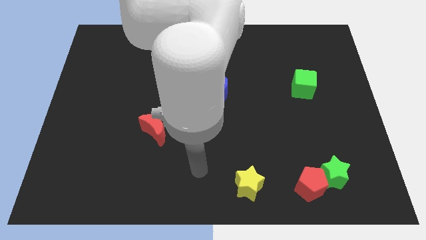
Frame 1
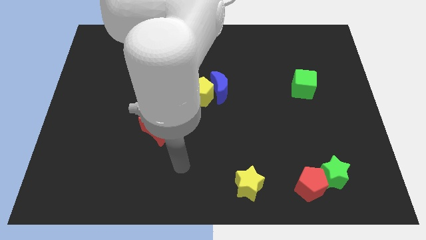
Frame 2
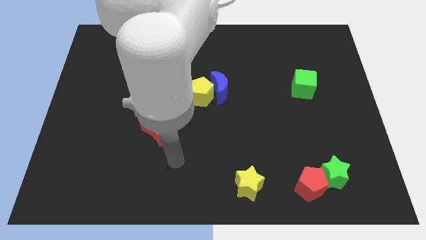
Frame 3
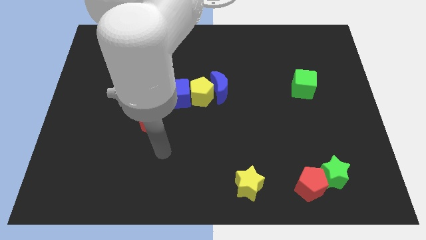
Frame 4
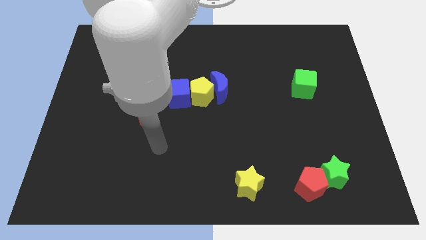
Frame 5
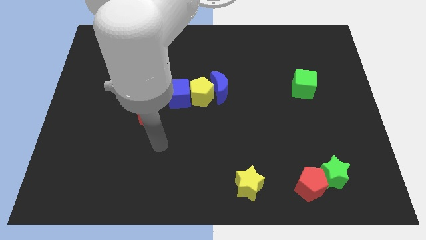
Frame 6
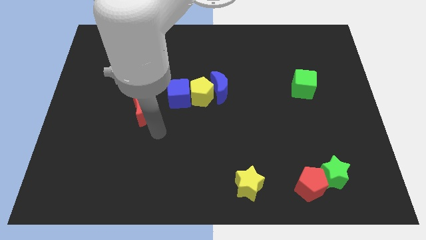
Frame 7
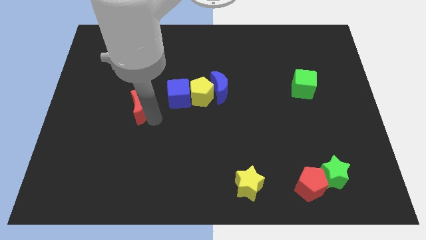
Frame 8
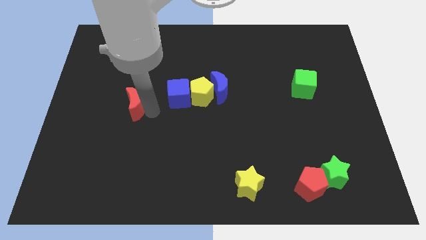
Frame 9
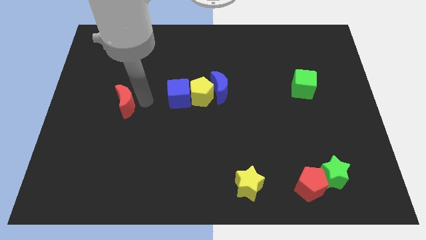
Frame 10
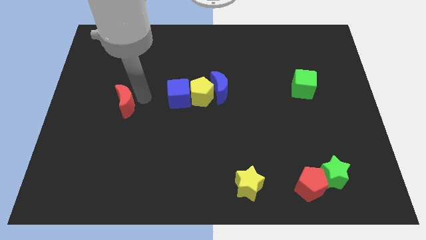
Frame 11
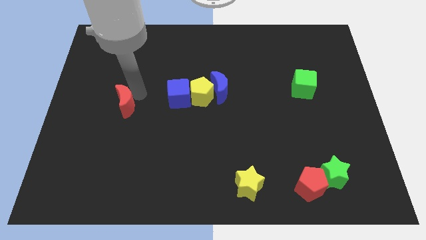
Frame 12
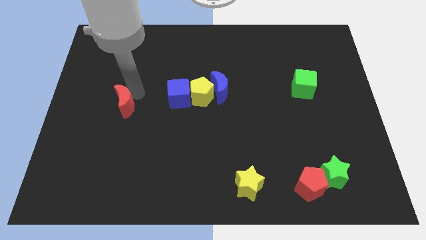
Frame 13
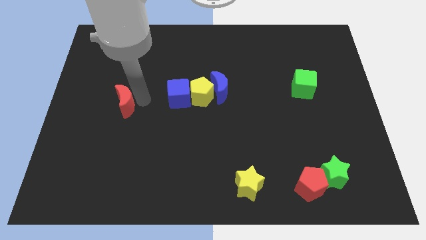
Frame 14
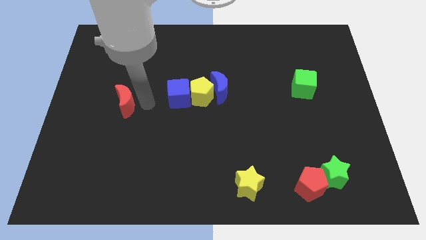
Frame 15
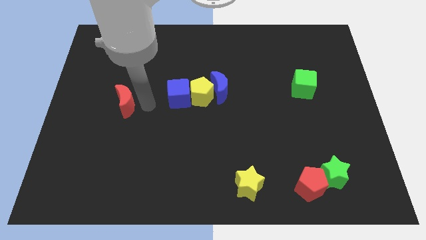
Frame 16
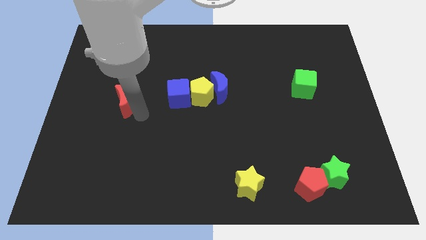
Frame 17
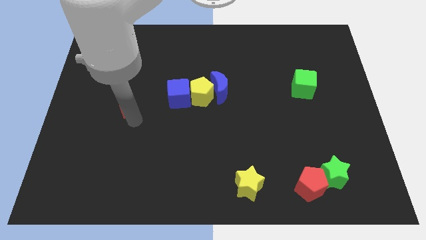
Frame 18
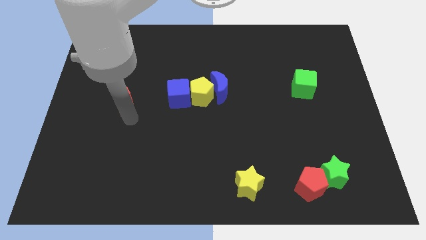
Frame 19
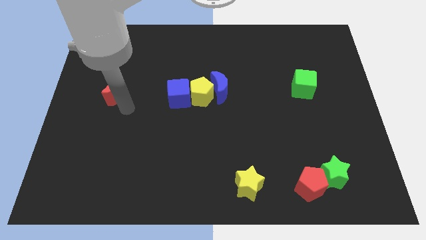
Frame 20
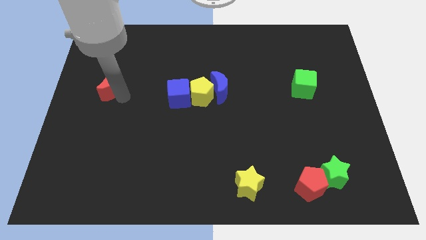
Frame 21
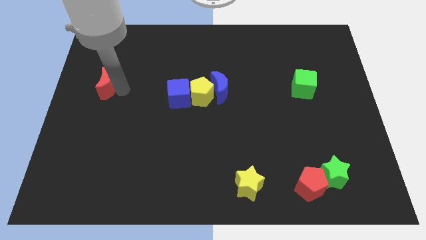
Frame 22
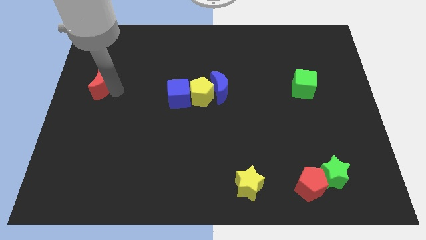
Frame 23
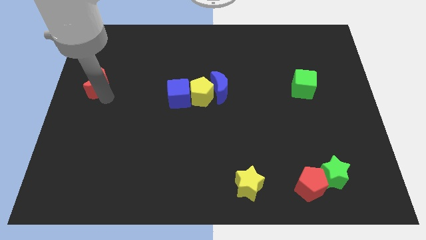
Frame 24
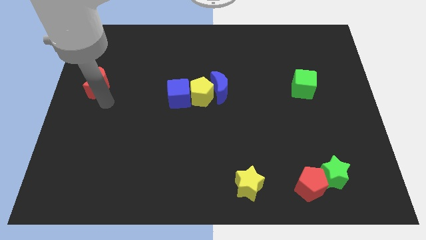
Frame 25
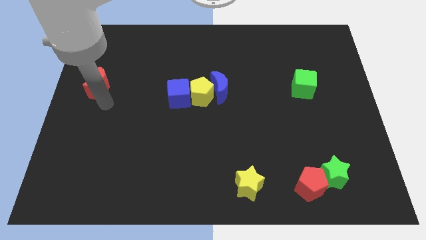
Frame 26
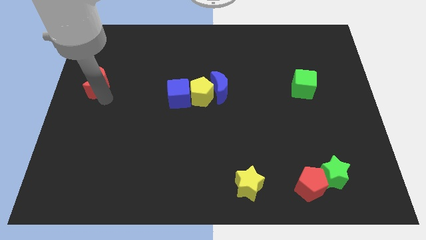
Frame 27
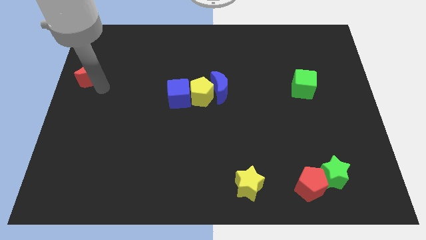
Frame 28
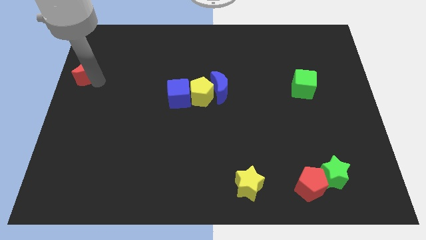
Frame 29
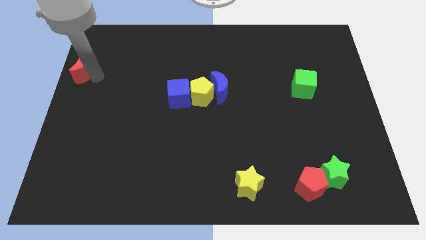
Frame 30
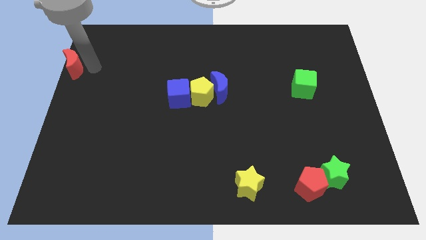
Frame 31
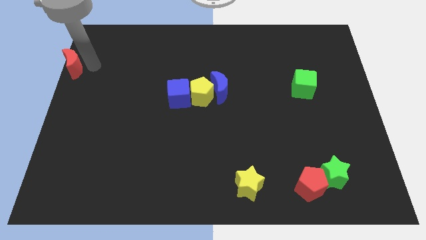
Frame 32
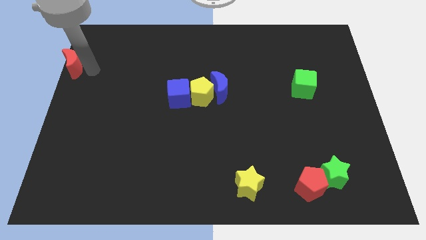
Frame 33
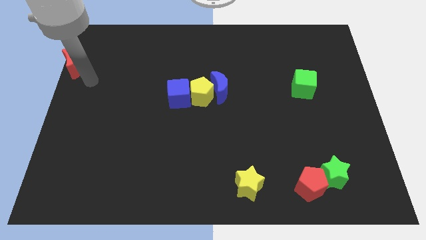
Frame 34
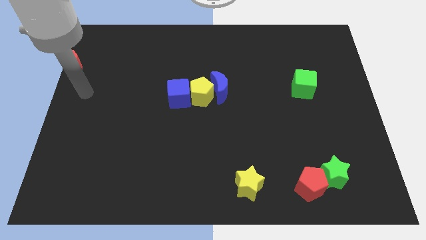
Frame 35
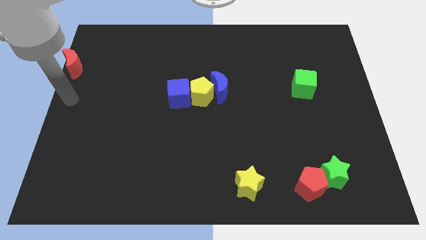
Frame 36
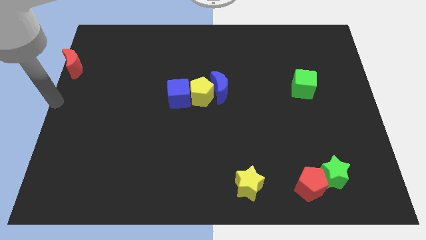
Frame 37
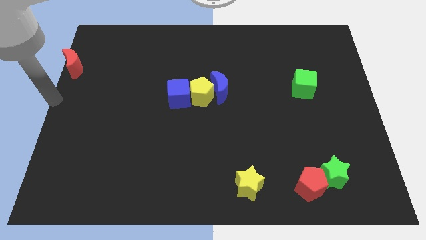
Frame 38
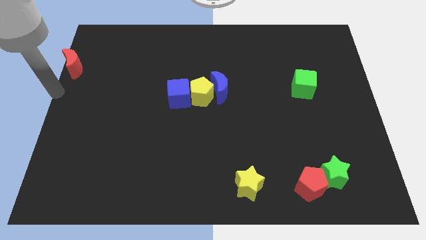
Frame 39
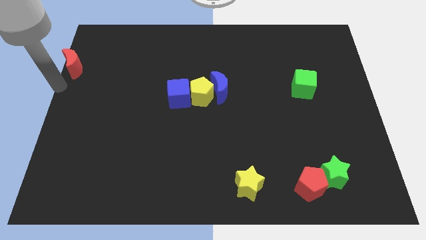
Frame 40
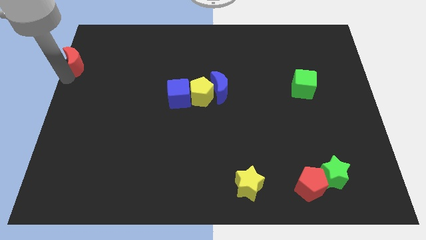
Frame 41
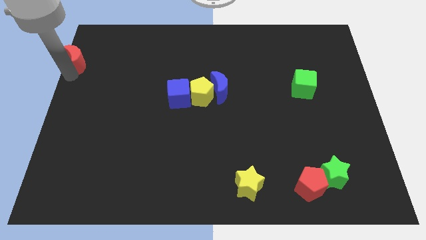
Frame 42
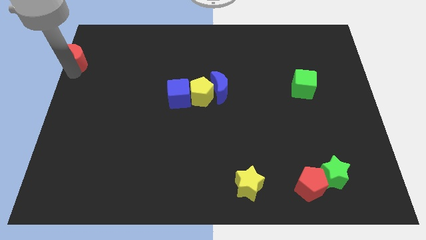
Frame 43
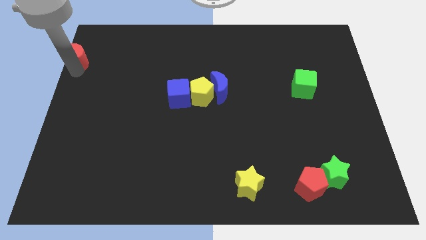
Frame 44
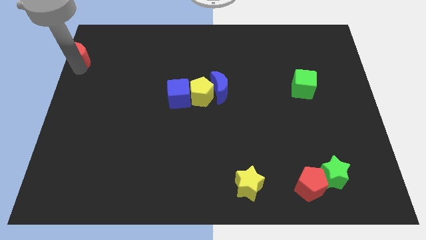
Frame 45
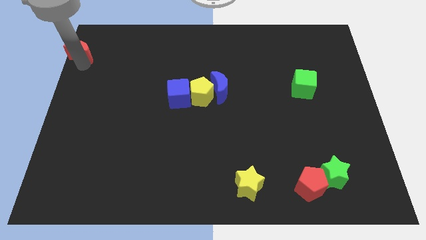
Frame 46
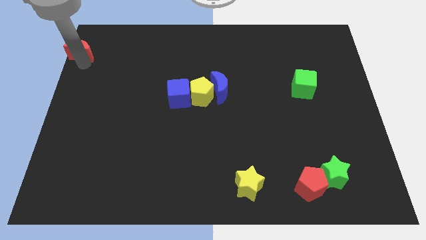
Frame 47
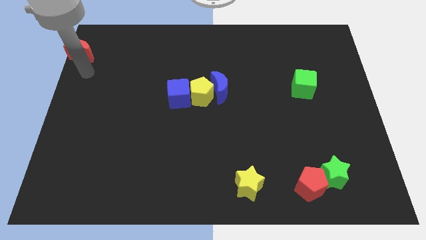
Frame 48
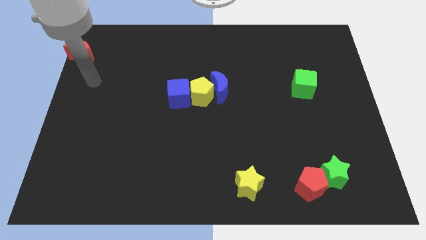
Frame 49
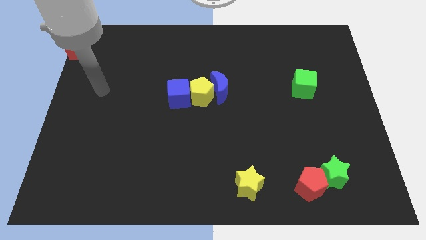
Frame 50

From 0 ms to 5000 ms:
move the red crescent to the top left side of the board

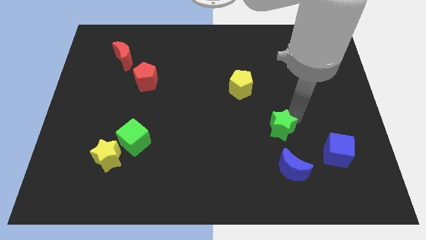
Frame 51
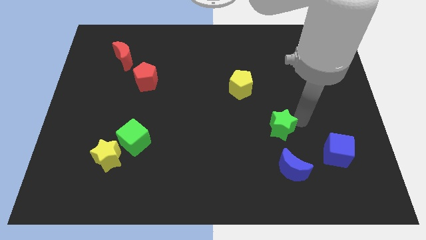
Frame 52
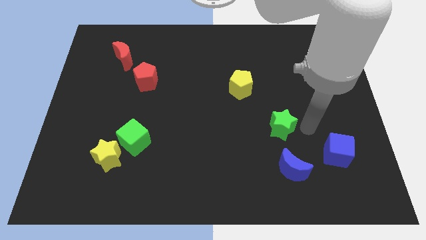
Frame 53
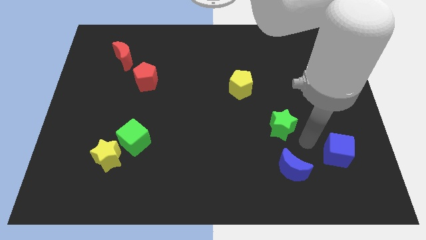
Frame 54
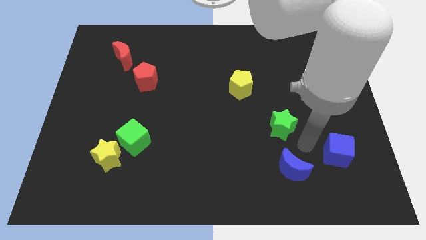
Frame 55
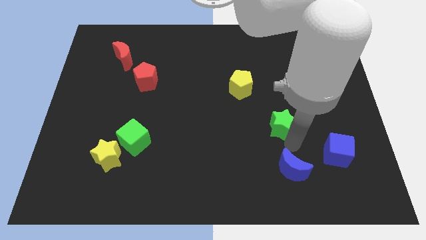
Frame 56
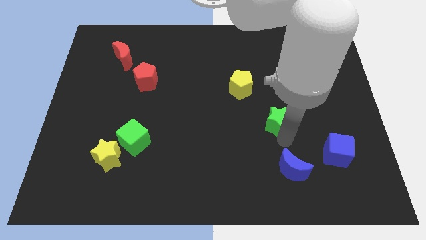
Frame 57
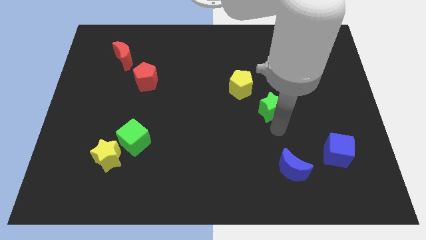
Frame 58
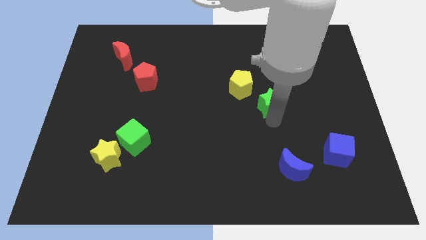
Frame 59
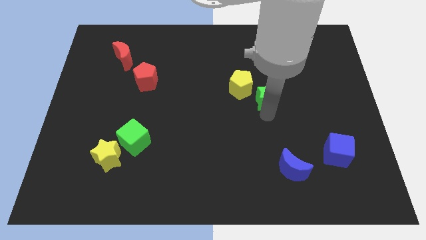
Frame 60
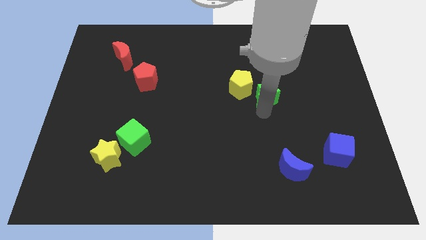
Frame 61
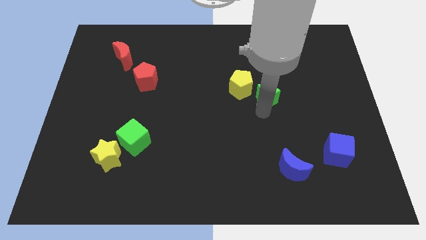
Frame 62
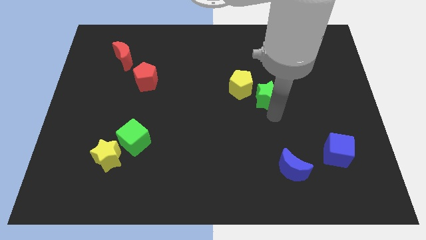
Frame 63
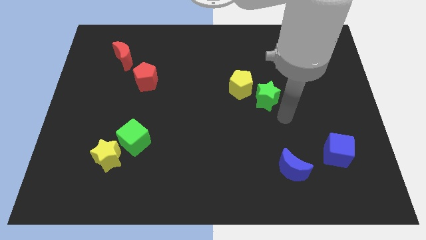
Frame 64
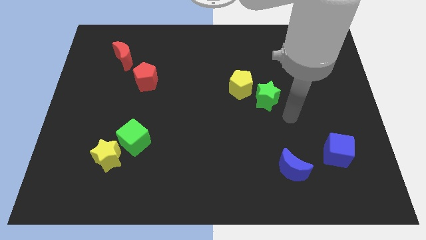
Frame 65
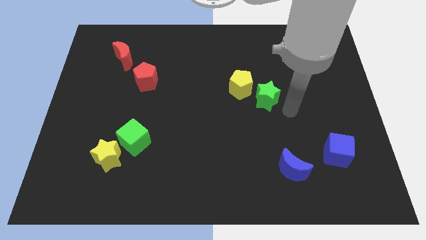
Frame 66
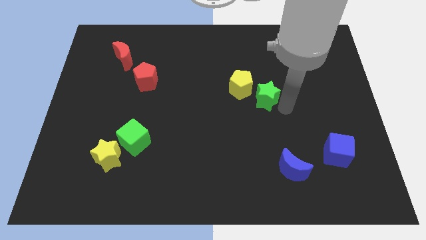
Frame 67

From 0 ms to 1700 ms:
place green star to the bottom right of yellow pentagon

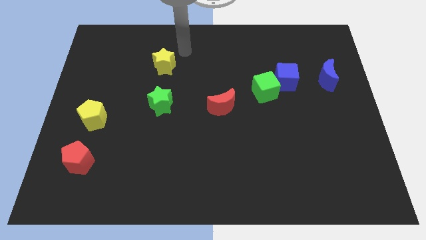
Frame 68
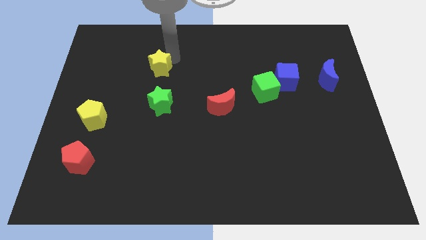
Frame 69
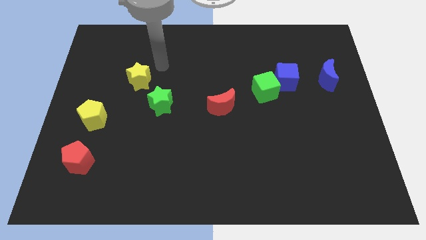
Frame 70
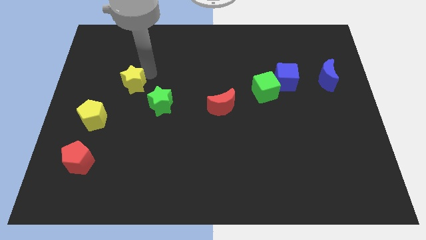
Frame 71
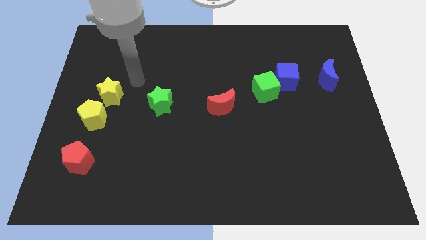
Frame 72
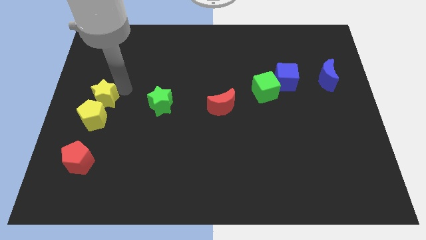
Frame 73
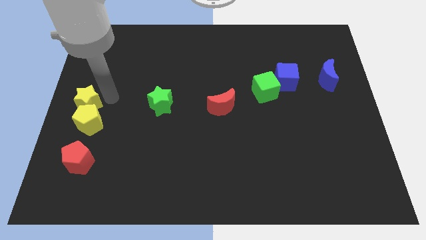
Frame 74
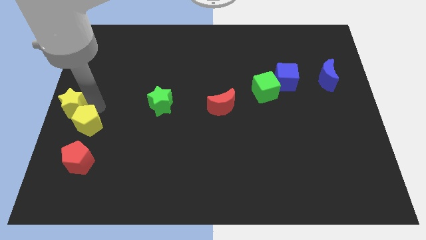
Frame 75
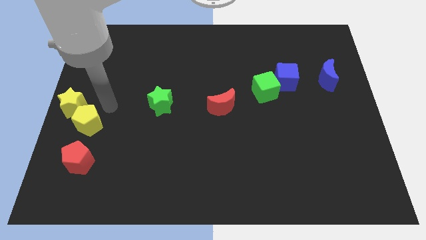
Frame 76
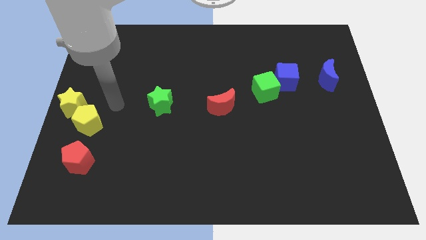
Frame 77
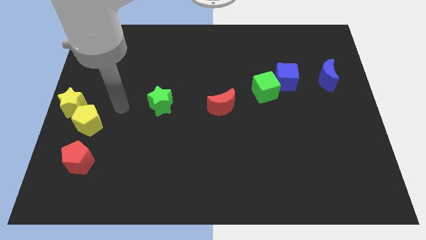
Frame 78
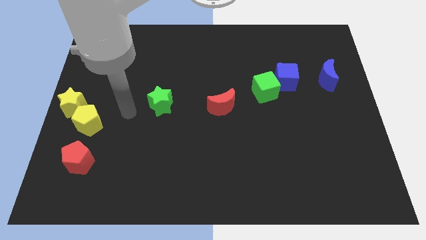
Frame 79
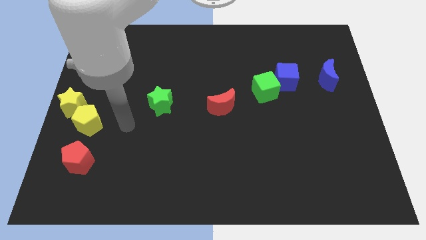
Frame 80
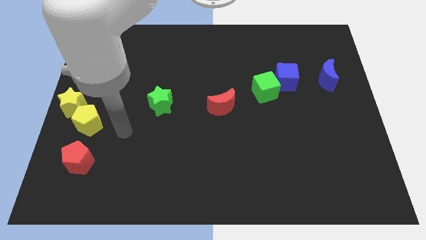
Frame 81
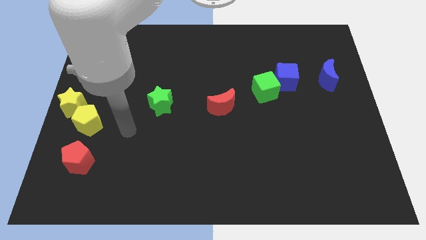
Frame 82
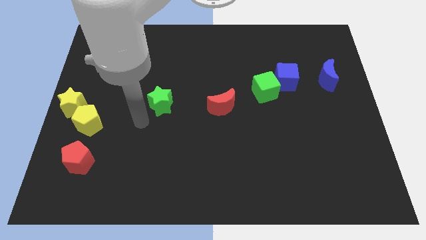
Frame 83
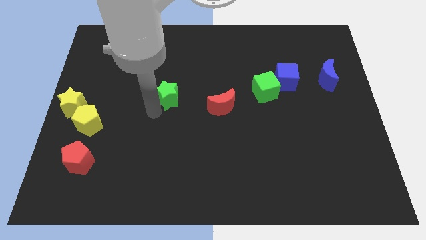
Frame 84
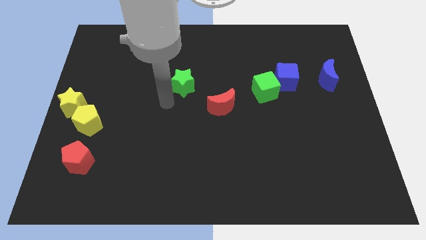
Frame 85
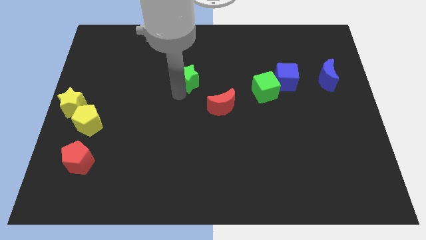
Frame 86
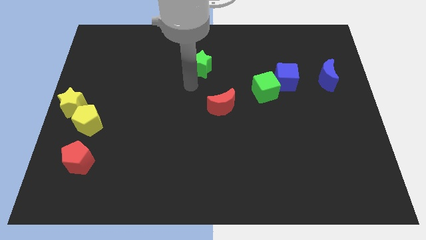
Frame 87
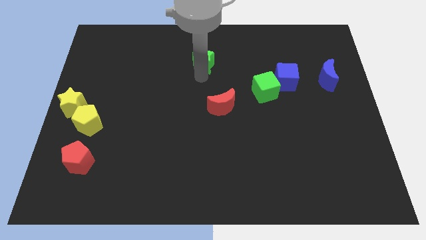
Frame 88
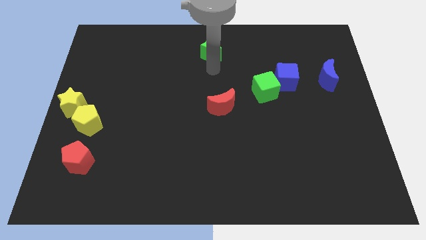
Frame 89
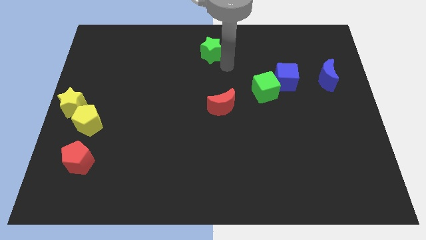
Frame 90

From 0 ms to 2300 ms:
place the green star above the red moon
